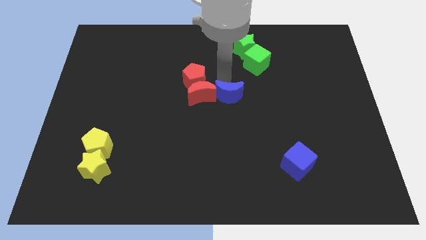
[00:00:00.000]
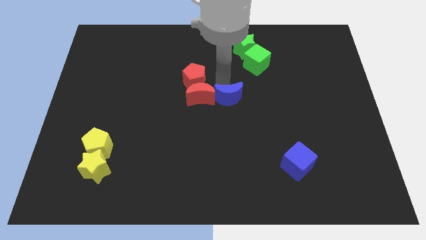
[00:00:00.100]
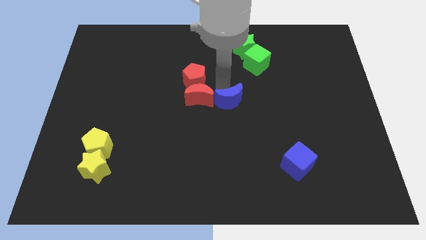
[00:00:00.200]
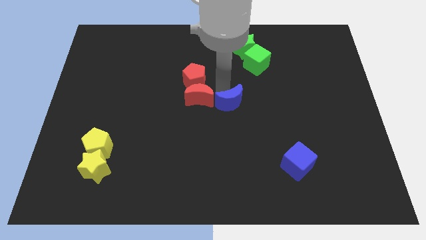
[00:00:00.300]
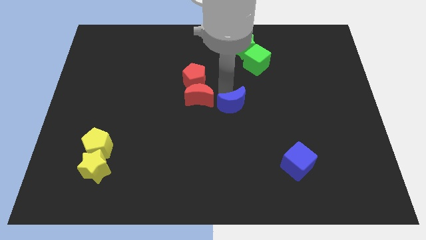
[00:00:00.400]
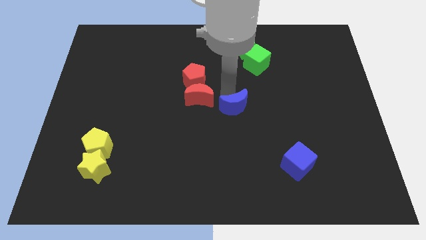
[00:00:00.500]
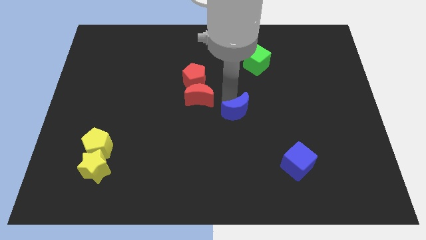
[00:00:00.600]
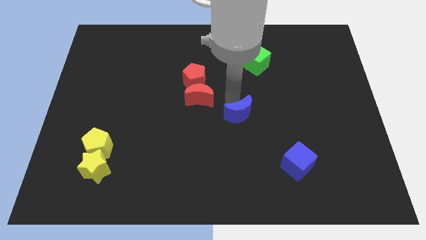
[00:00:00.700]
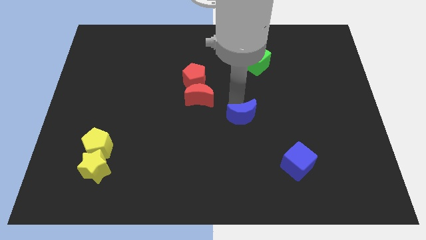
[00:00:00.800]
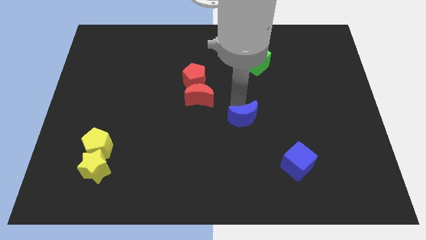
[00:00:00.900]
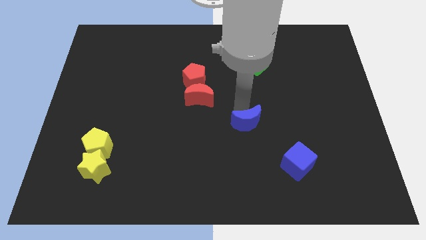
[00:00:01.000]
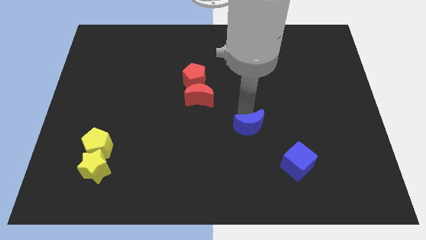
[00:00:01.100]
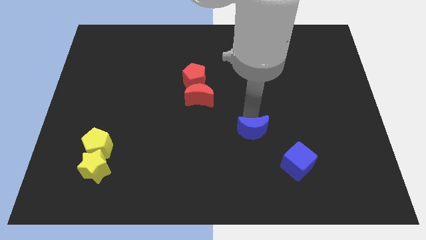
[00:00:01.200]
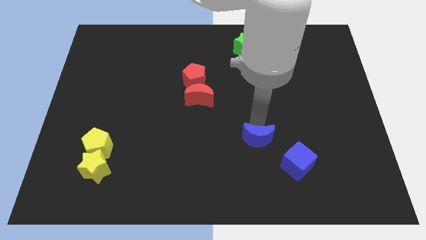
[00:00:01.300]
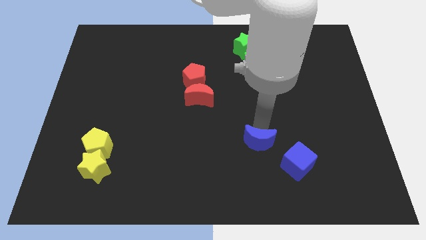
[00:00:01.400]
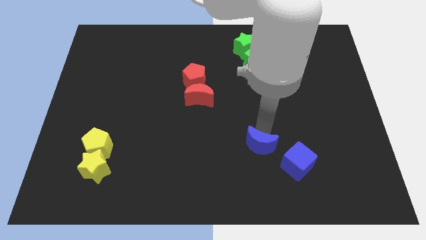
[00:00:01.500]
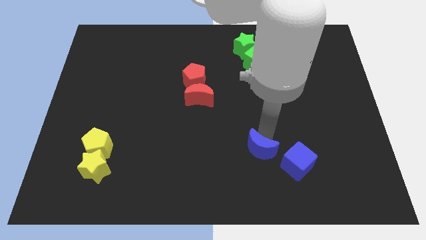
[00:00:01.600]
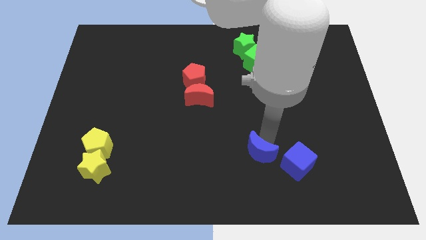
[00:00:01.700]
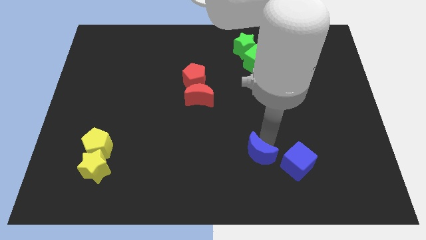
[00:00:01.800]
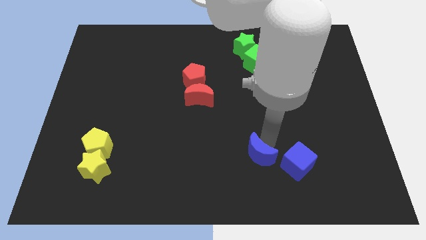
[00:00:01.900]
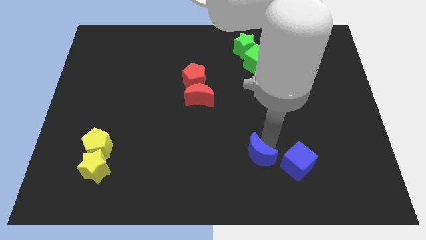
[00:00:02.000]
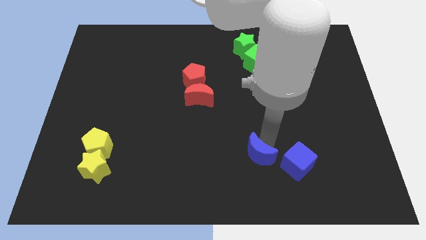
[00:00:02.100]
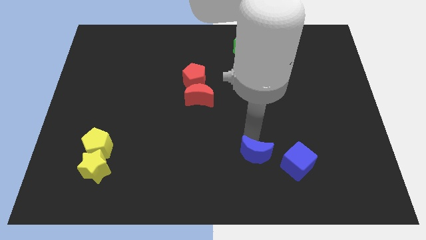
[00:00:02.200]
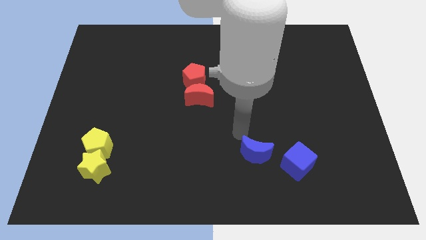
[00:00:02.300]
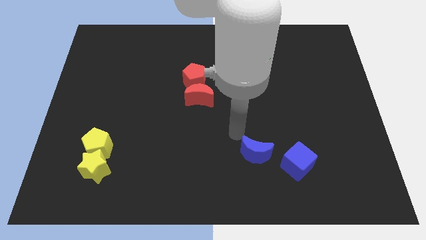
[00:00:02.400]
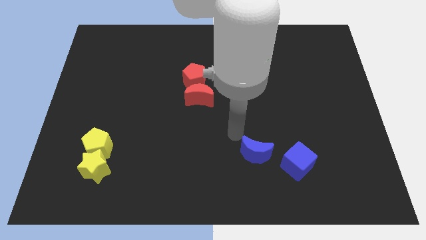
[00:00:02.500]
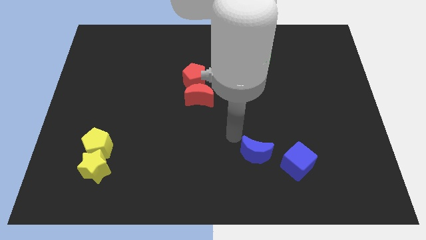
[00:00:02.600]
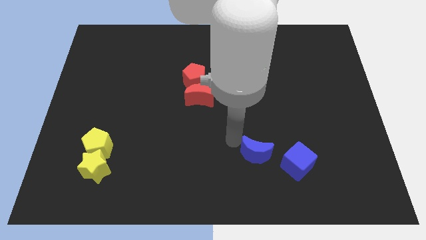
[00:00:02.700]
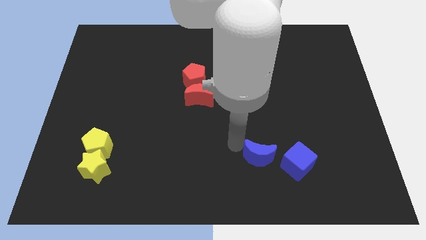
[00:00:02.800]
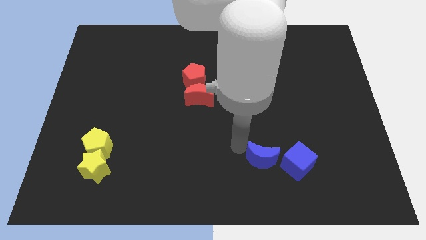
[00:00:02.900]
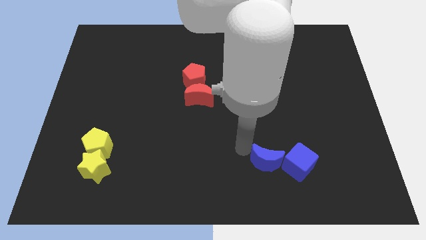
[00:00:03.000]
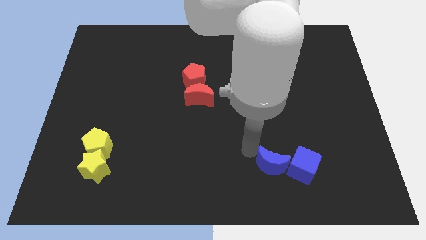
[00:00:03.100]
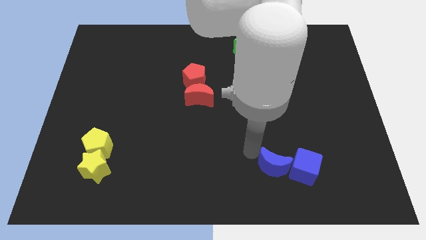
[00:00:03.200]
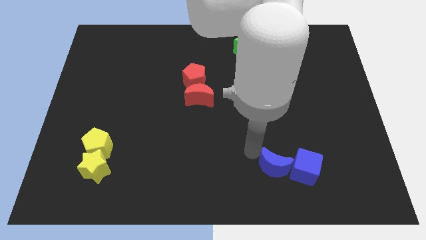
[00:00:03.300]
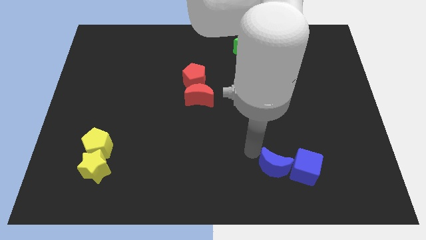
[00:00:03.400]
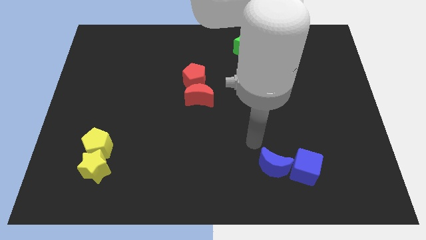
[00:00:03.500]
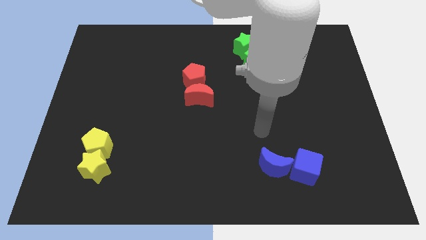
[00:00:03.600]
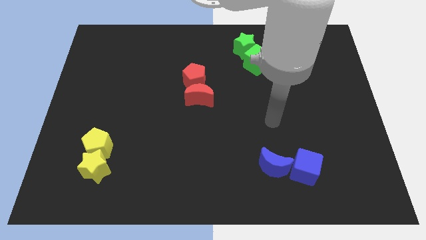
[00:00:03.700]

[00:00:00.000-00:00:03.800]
move the blue crescent into the blue cube

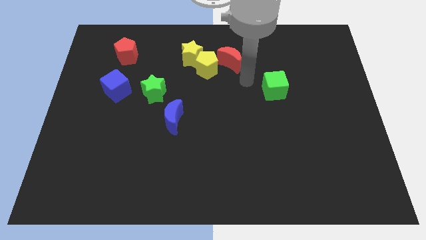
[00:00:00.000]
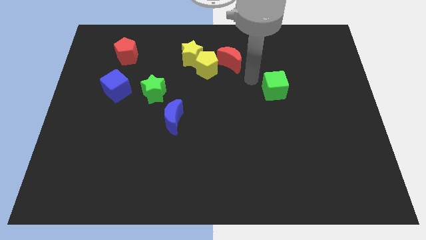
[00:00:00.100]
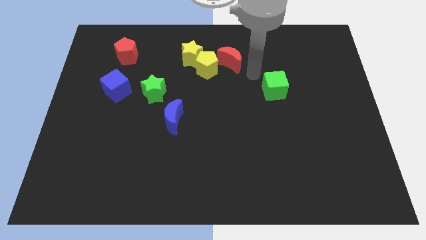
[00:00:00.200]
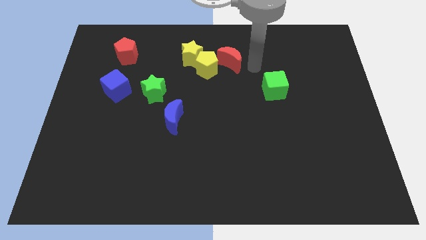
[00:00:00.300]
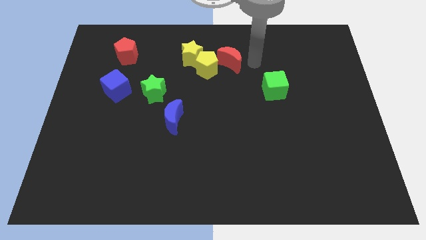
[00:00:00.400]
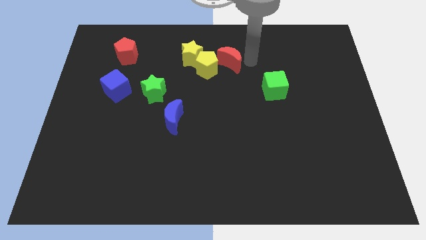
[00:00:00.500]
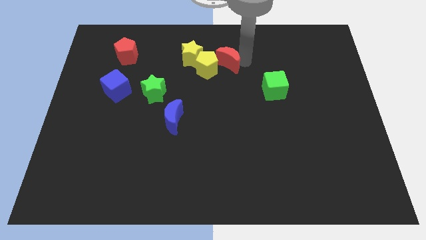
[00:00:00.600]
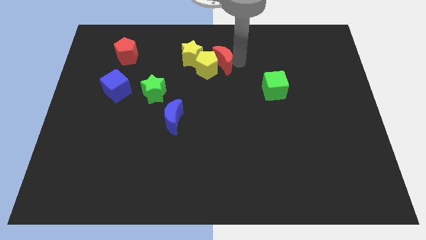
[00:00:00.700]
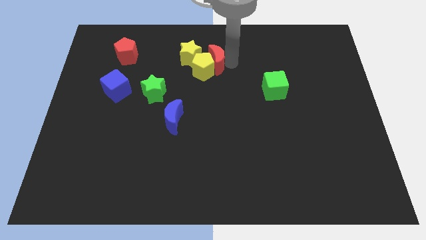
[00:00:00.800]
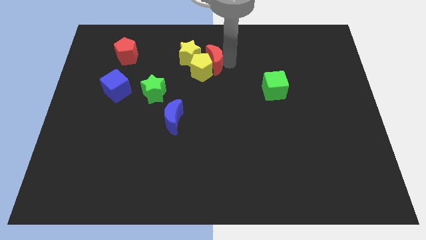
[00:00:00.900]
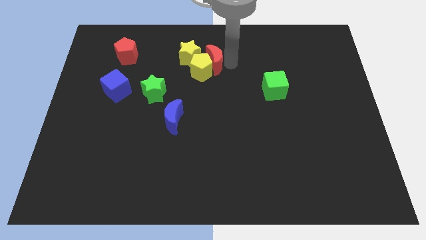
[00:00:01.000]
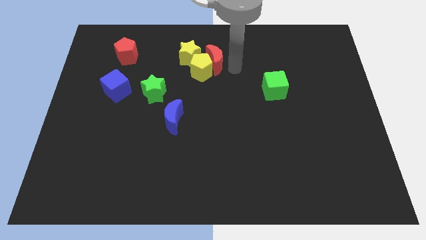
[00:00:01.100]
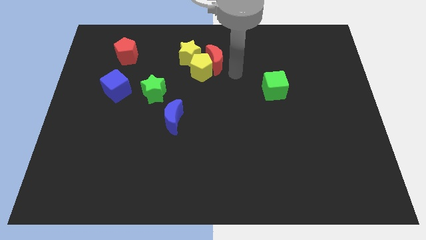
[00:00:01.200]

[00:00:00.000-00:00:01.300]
move the red moon into the right to the yellow pentagon

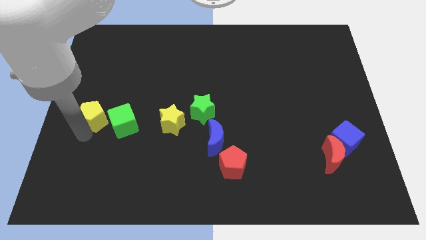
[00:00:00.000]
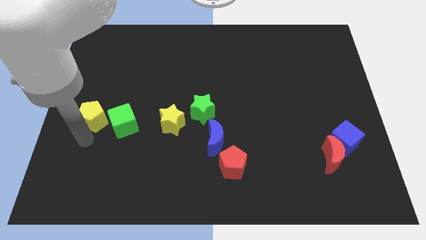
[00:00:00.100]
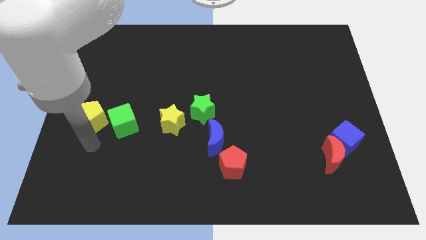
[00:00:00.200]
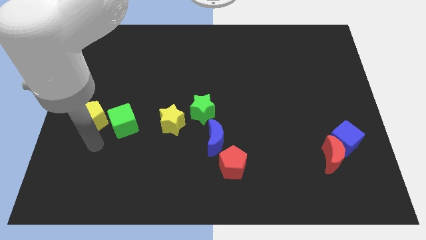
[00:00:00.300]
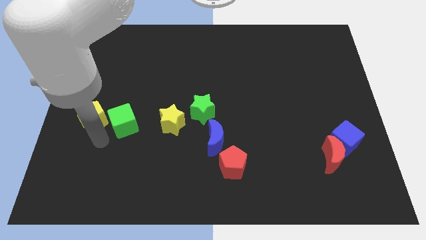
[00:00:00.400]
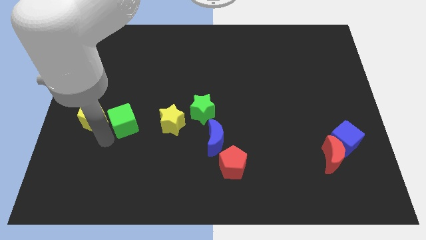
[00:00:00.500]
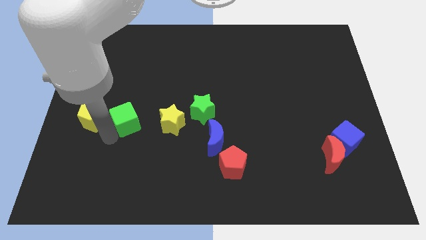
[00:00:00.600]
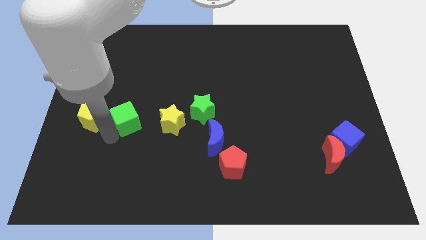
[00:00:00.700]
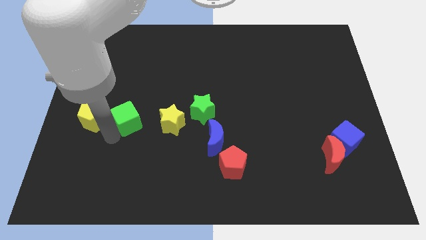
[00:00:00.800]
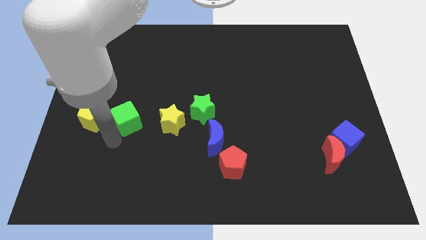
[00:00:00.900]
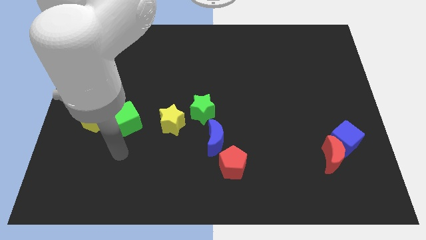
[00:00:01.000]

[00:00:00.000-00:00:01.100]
move the green cube to the top of the board

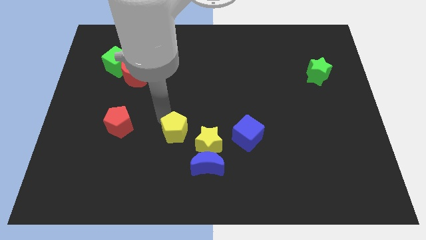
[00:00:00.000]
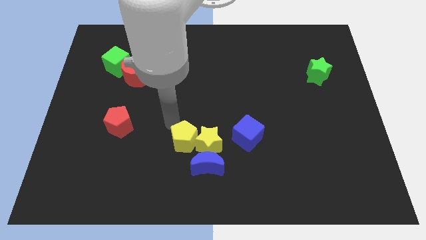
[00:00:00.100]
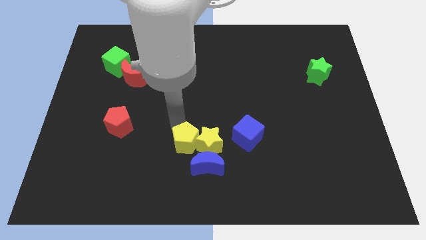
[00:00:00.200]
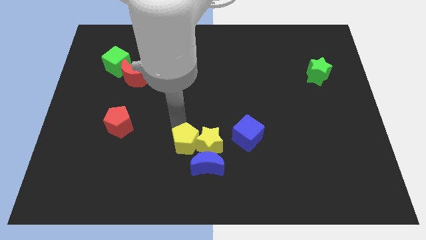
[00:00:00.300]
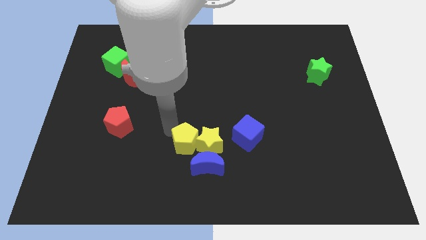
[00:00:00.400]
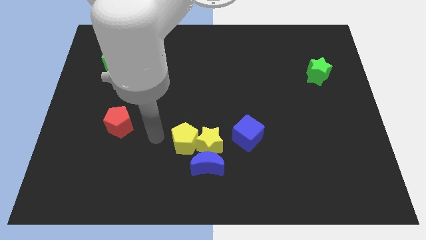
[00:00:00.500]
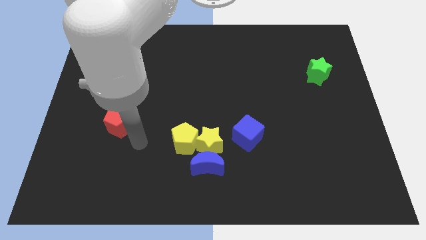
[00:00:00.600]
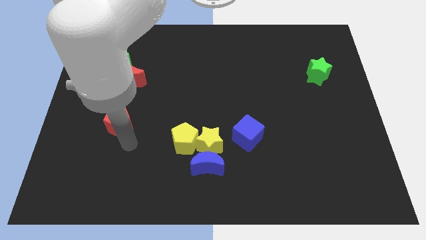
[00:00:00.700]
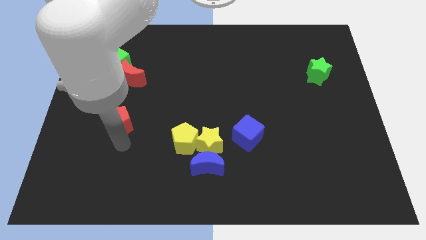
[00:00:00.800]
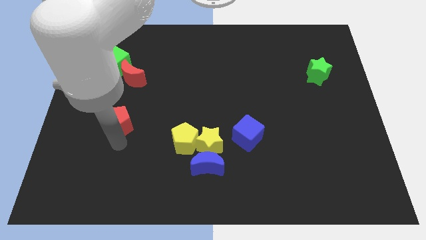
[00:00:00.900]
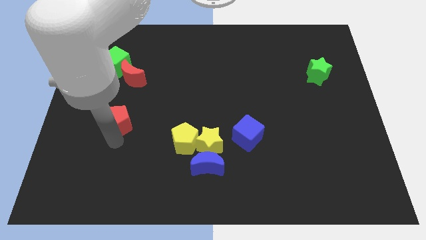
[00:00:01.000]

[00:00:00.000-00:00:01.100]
push the yellow pentagon left to the yellow star

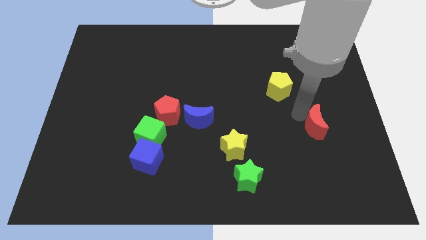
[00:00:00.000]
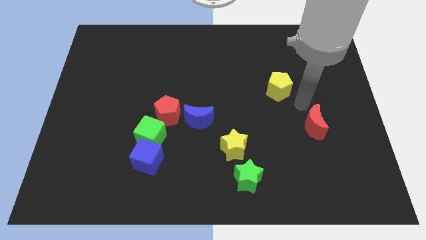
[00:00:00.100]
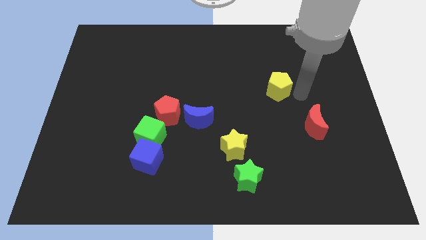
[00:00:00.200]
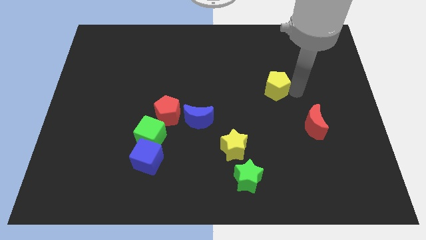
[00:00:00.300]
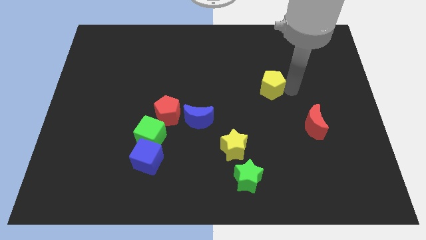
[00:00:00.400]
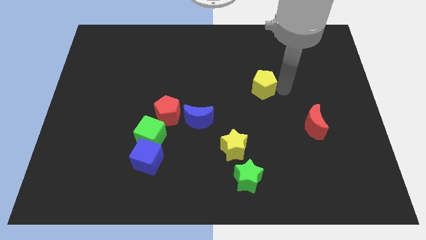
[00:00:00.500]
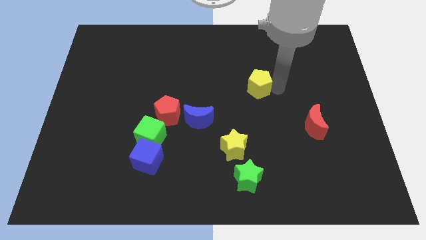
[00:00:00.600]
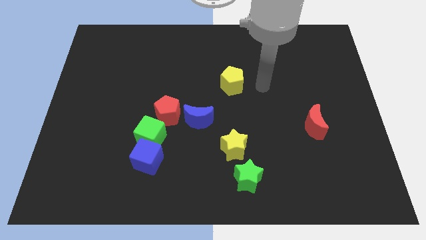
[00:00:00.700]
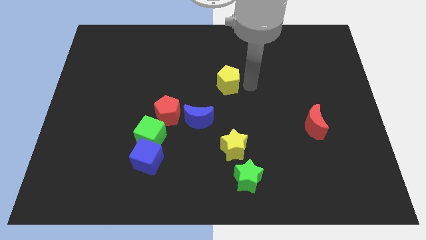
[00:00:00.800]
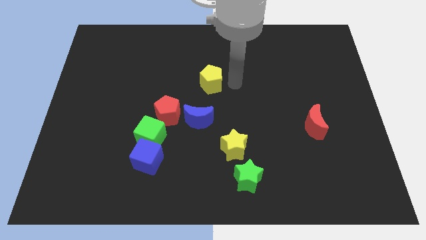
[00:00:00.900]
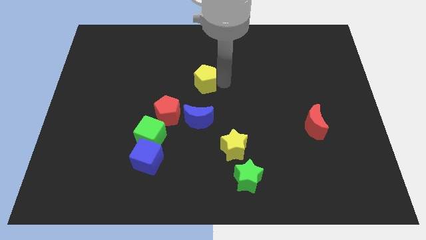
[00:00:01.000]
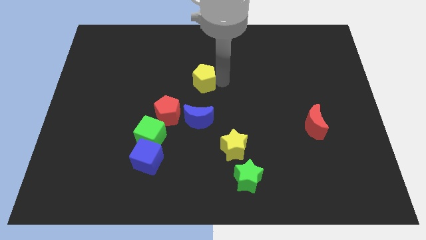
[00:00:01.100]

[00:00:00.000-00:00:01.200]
move the yellow pentagon to the top of the blue crescent

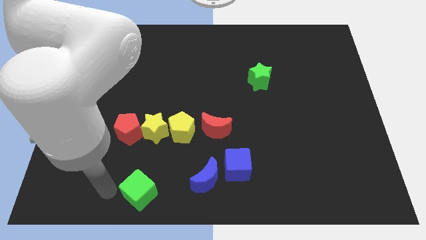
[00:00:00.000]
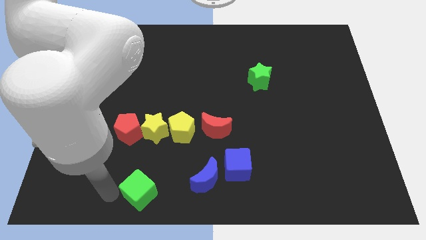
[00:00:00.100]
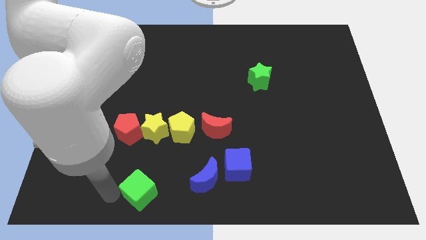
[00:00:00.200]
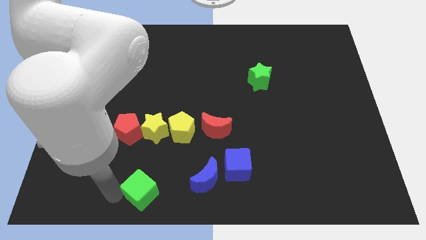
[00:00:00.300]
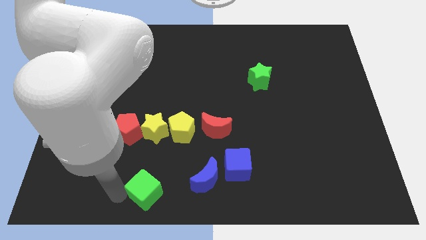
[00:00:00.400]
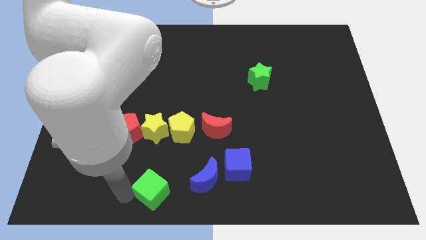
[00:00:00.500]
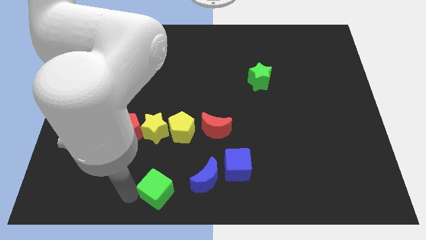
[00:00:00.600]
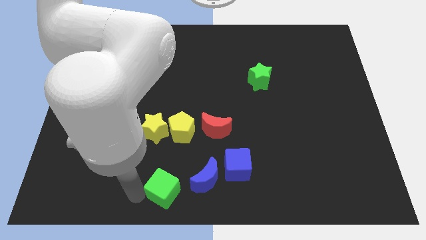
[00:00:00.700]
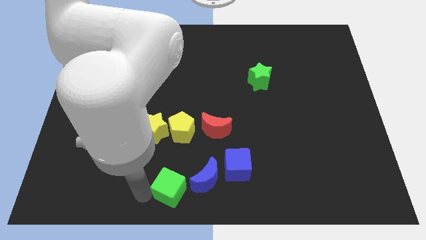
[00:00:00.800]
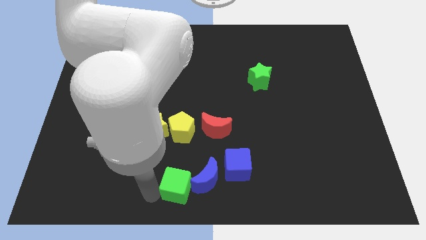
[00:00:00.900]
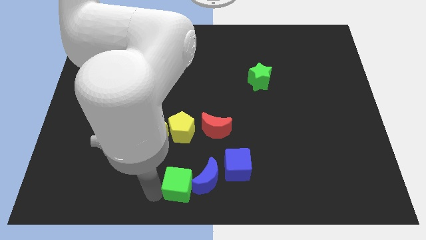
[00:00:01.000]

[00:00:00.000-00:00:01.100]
push green cube into blue moon
